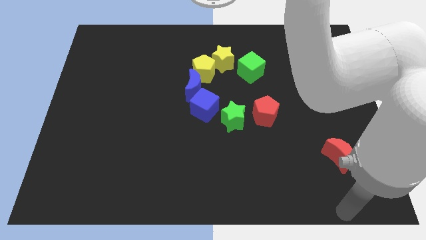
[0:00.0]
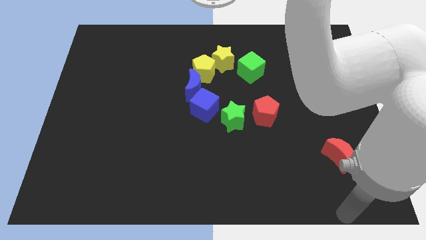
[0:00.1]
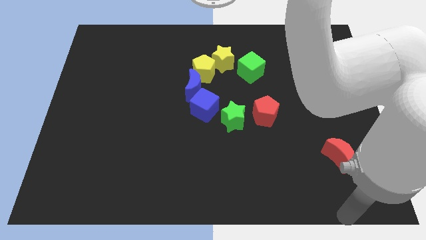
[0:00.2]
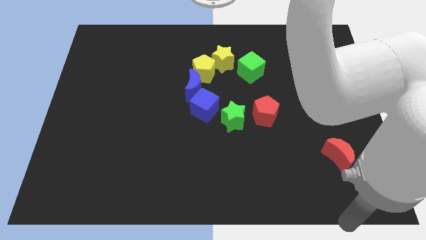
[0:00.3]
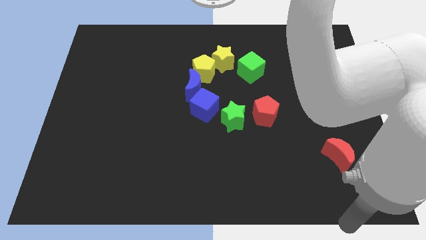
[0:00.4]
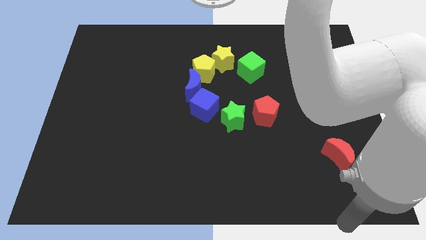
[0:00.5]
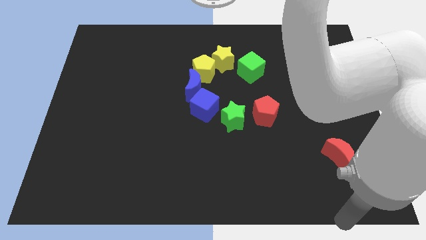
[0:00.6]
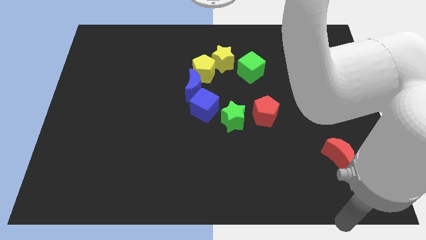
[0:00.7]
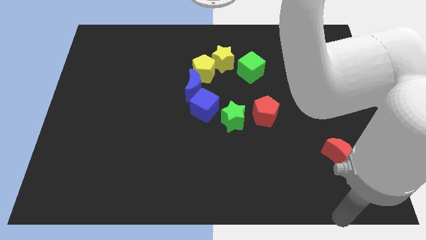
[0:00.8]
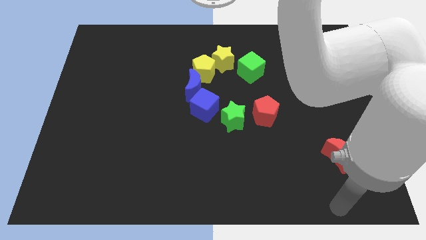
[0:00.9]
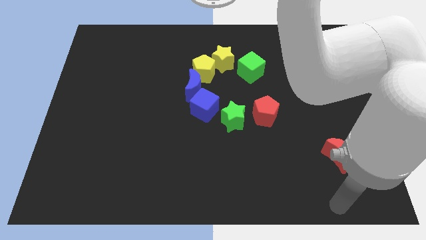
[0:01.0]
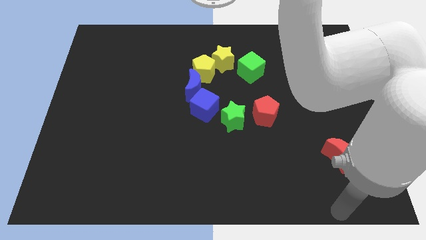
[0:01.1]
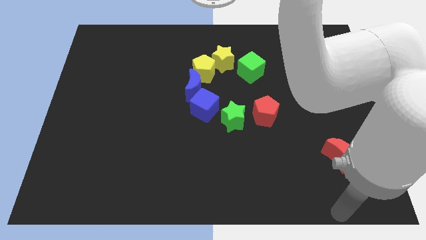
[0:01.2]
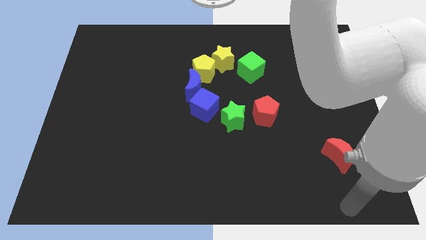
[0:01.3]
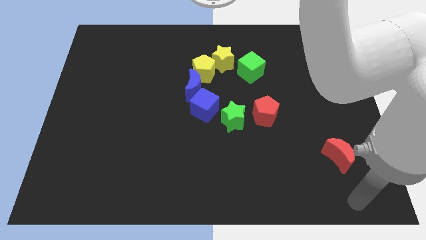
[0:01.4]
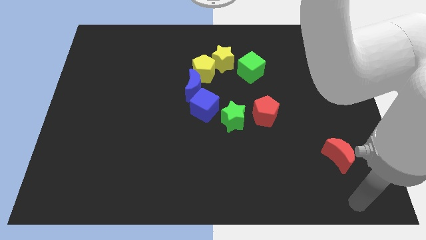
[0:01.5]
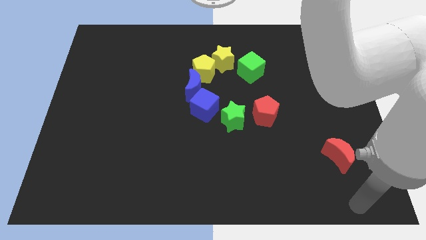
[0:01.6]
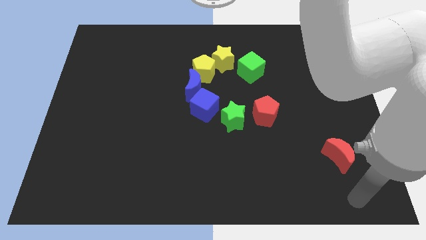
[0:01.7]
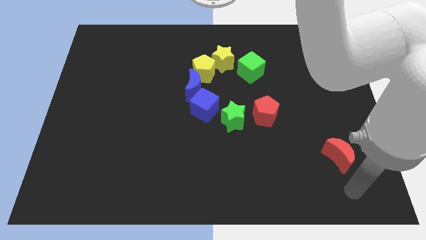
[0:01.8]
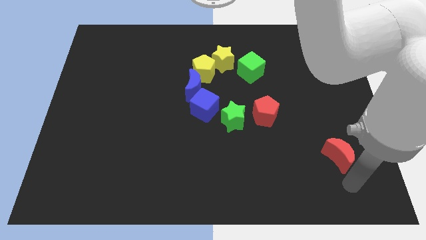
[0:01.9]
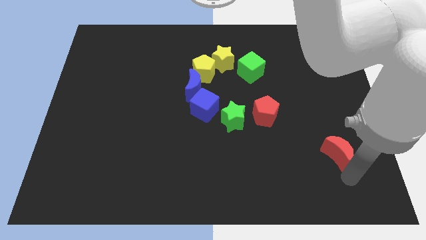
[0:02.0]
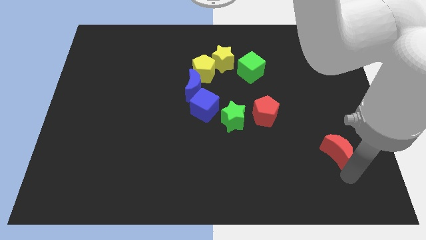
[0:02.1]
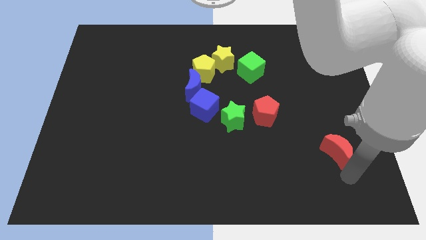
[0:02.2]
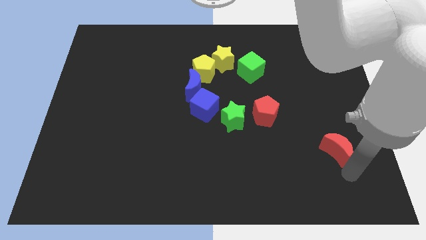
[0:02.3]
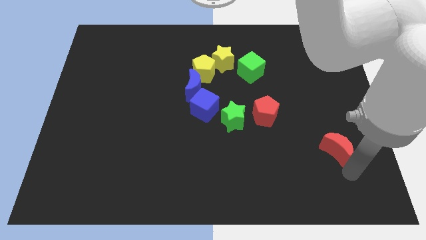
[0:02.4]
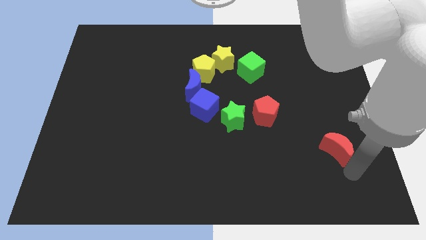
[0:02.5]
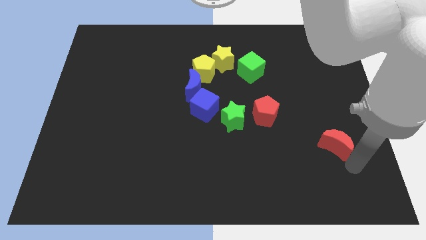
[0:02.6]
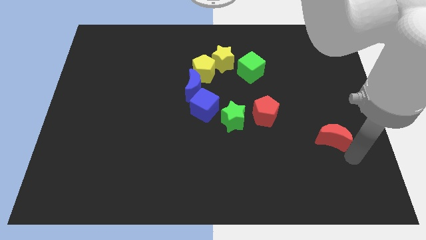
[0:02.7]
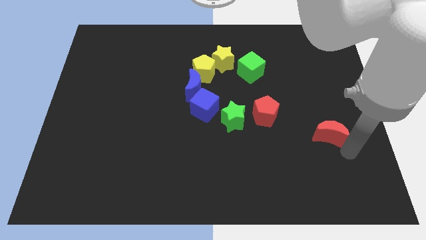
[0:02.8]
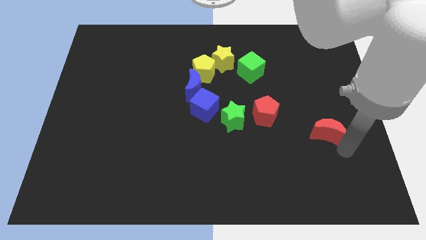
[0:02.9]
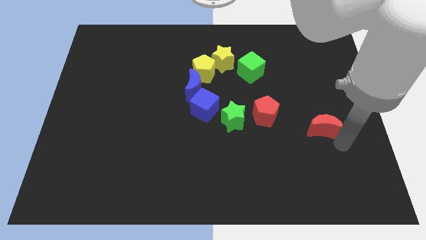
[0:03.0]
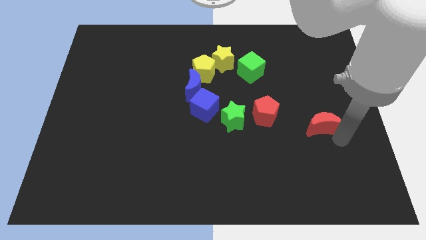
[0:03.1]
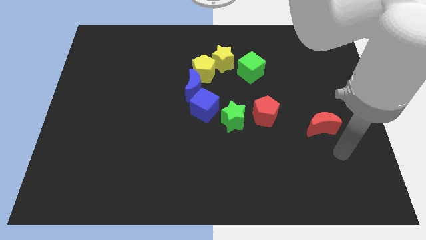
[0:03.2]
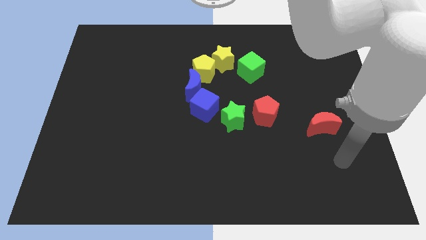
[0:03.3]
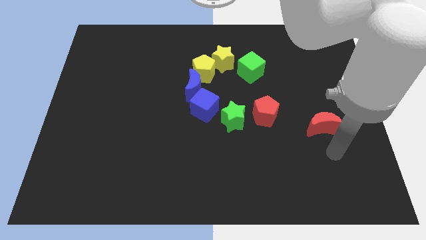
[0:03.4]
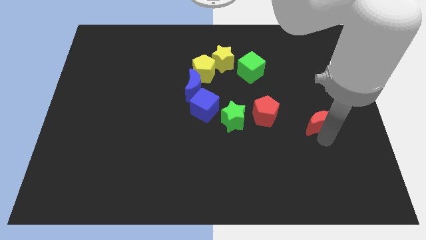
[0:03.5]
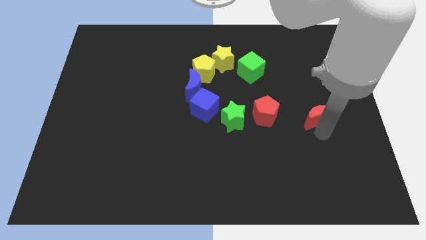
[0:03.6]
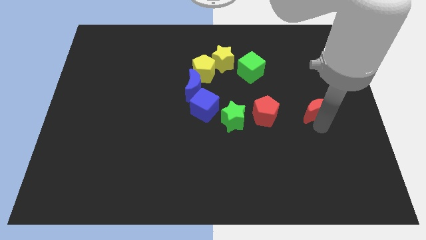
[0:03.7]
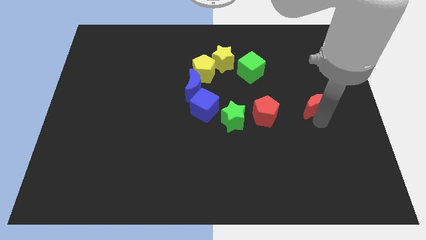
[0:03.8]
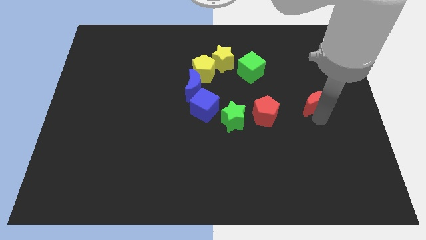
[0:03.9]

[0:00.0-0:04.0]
push the red moon right to the red pentagon

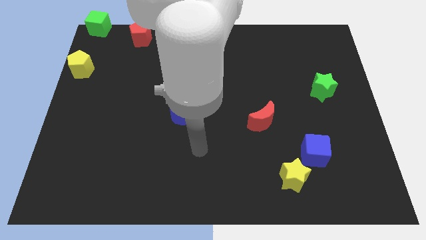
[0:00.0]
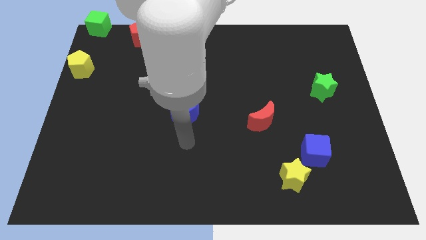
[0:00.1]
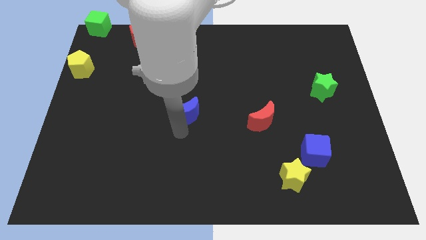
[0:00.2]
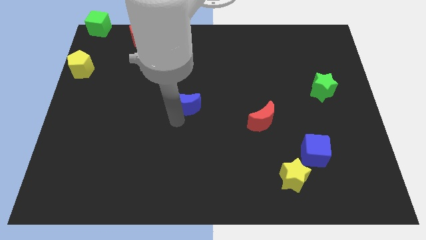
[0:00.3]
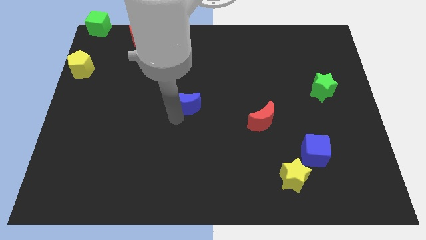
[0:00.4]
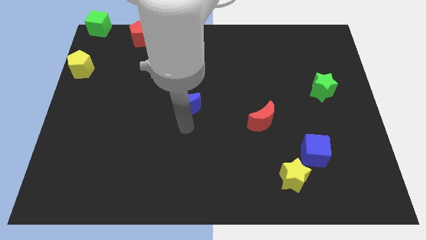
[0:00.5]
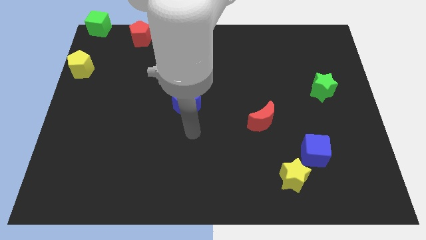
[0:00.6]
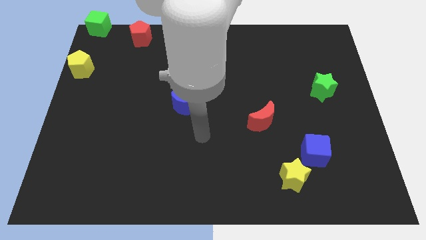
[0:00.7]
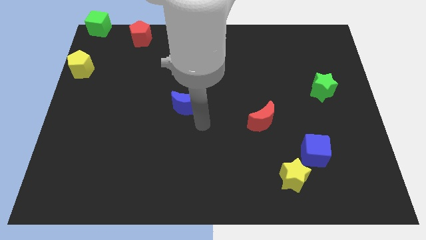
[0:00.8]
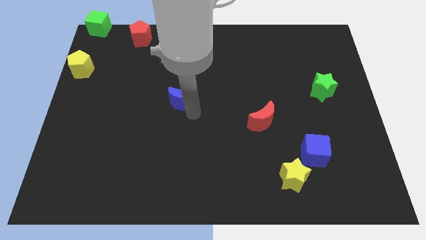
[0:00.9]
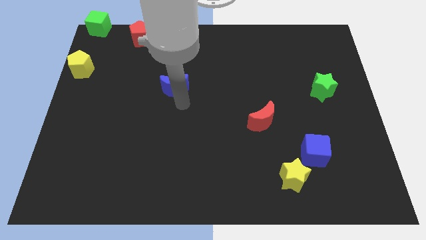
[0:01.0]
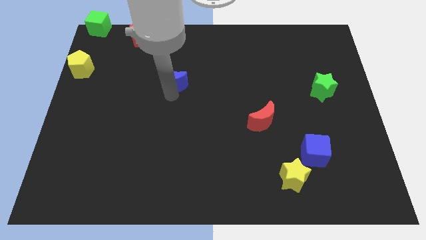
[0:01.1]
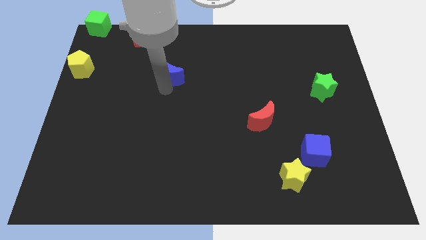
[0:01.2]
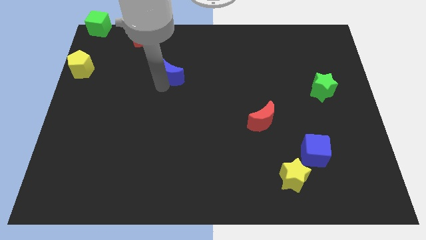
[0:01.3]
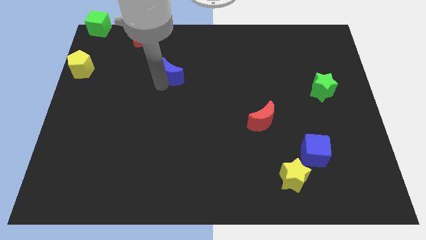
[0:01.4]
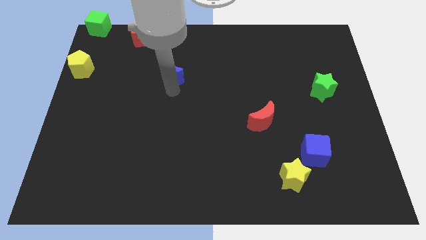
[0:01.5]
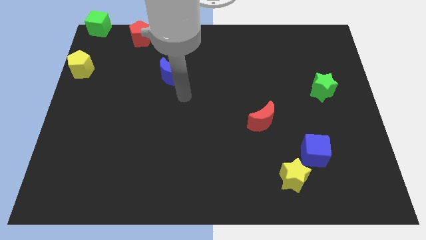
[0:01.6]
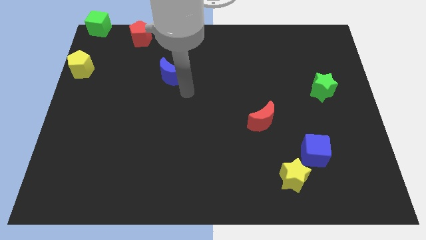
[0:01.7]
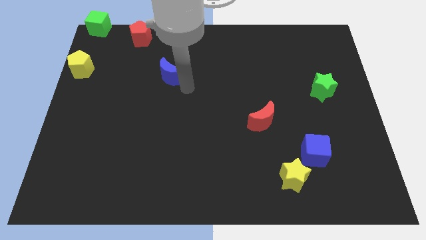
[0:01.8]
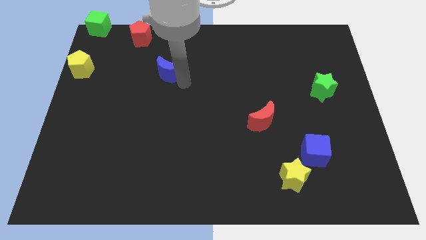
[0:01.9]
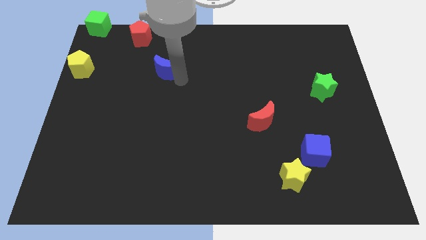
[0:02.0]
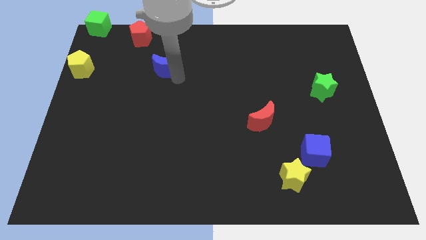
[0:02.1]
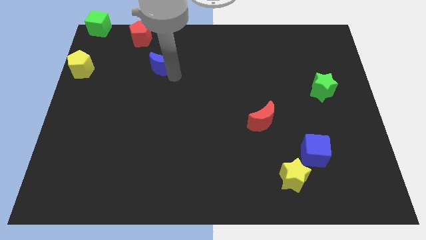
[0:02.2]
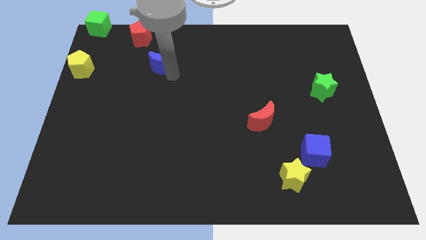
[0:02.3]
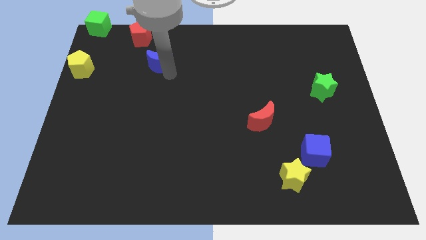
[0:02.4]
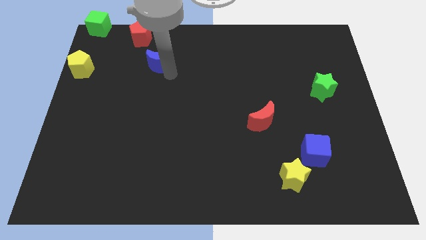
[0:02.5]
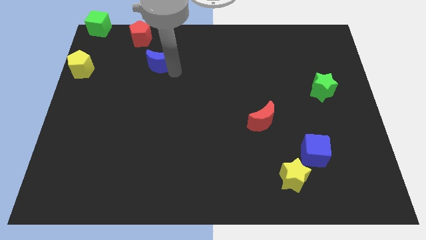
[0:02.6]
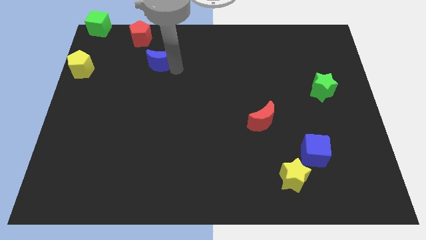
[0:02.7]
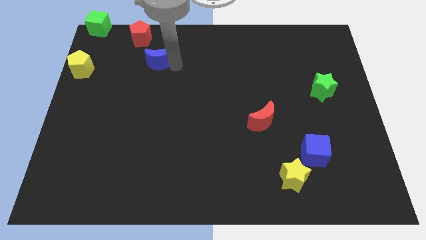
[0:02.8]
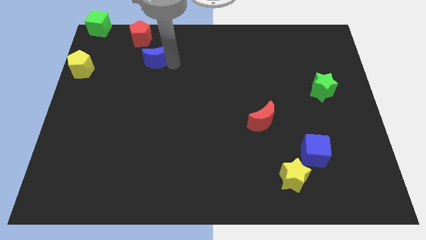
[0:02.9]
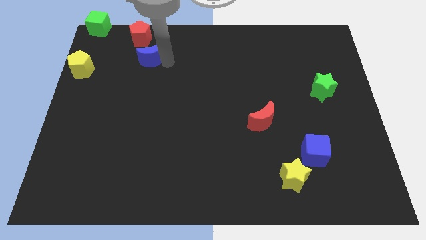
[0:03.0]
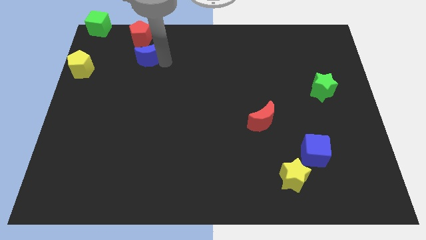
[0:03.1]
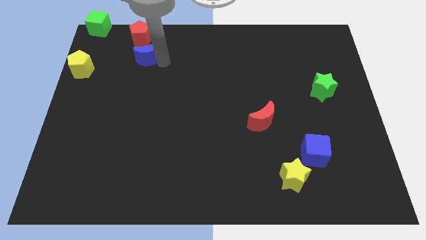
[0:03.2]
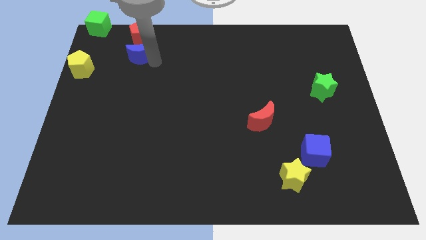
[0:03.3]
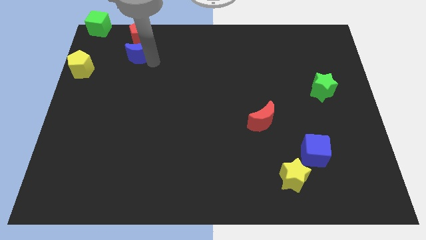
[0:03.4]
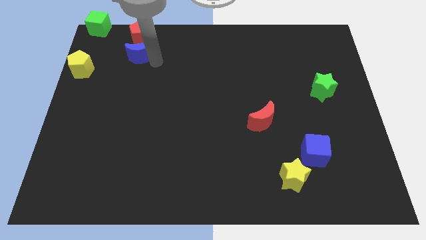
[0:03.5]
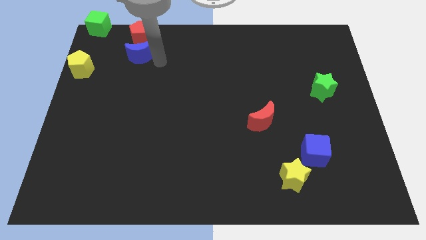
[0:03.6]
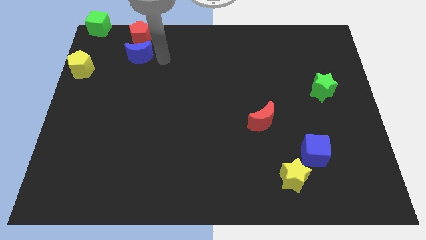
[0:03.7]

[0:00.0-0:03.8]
push the blue moon into the red pentagon

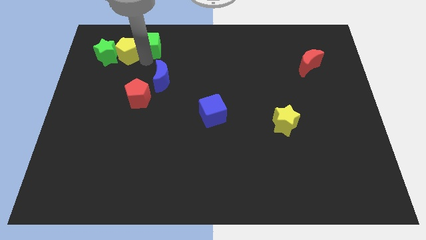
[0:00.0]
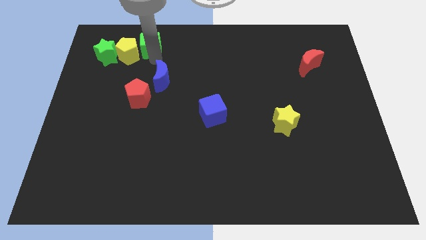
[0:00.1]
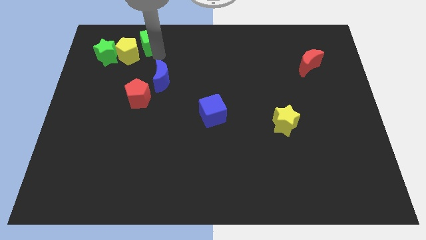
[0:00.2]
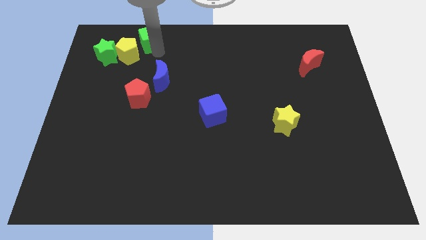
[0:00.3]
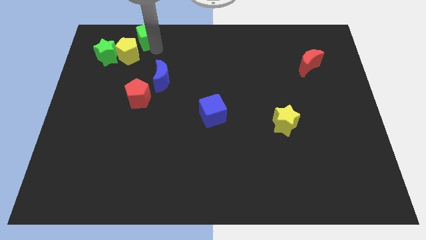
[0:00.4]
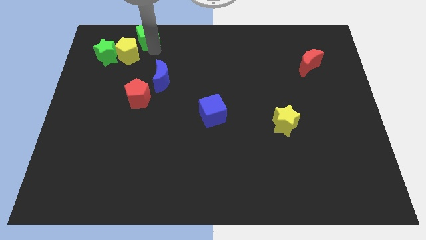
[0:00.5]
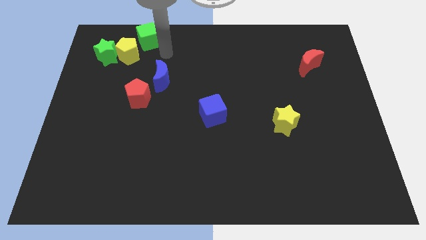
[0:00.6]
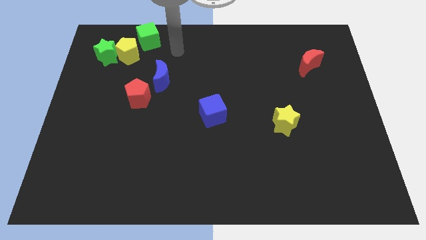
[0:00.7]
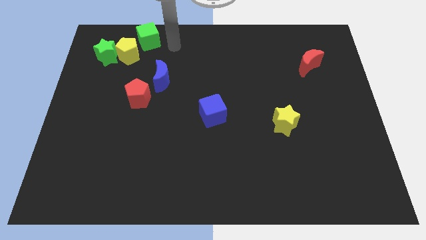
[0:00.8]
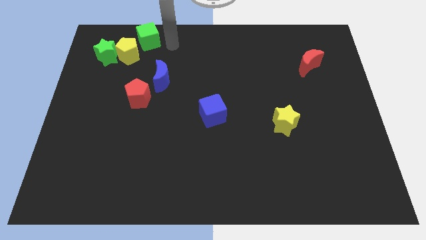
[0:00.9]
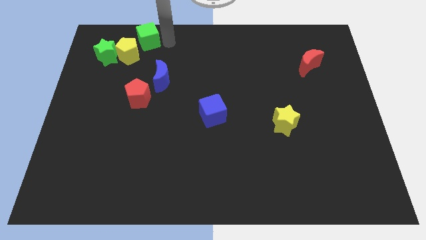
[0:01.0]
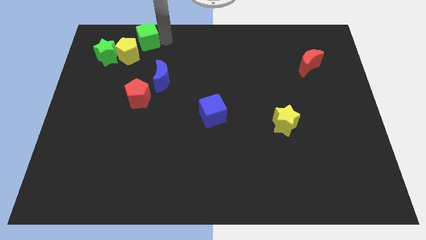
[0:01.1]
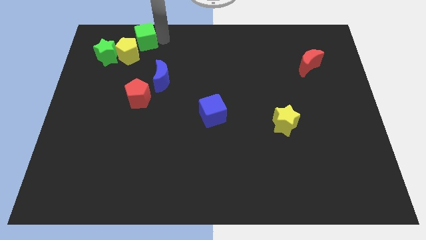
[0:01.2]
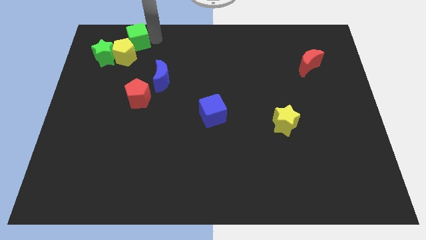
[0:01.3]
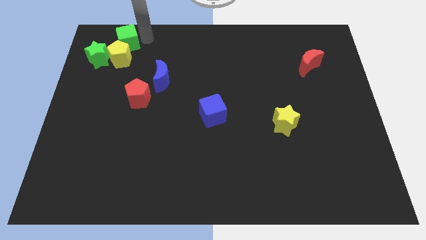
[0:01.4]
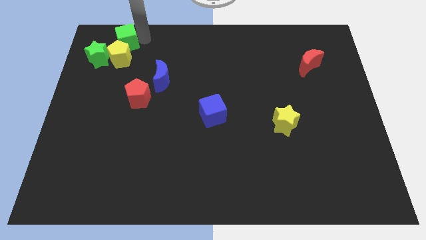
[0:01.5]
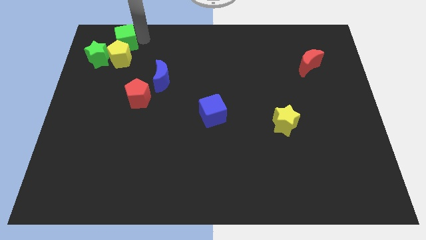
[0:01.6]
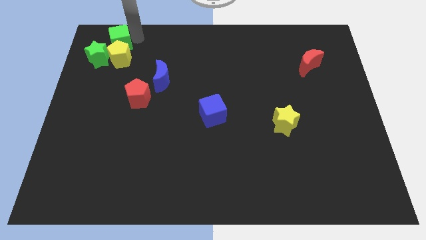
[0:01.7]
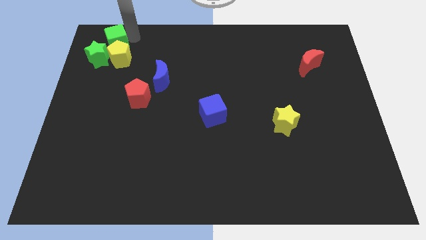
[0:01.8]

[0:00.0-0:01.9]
put the green cube at the top of the yellow pentagon
